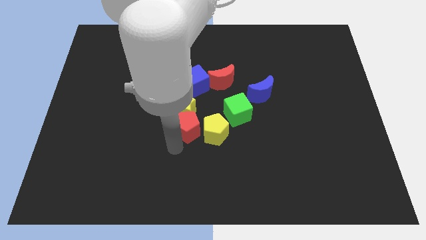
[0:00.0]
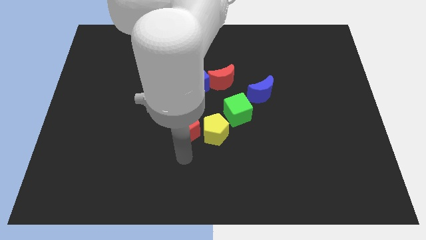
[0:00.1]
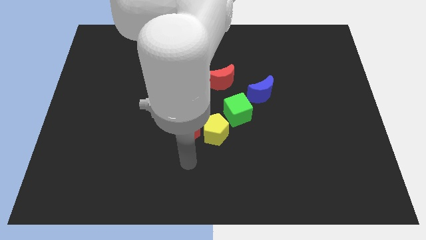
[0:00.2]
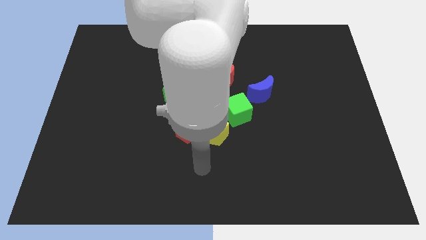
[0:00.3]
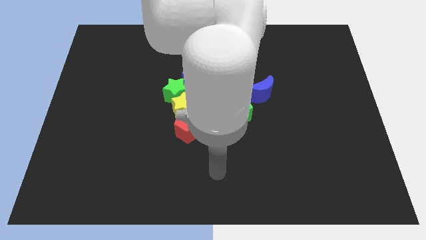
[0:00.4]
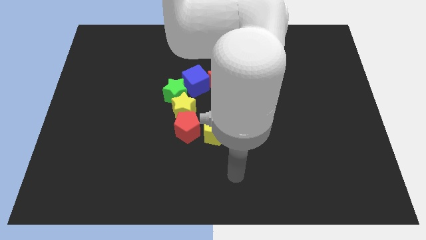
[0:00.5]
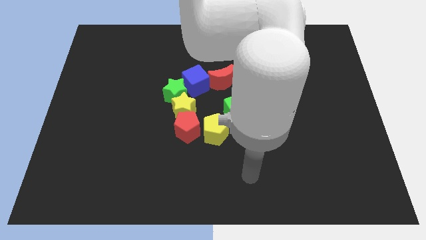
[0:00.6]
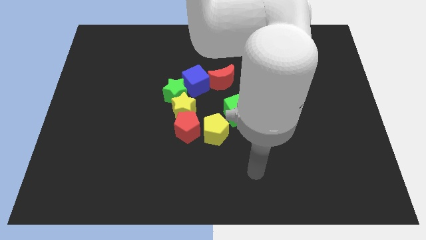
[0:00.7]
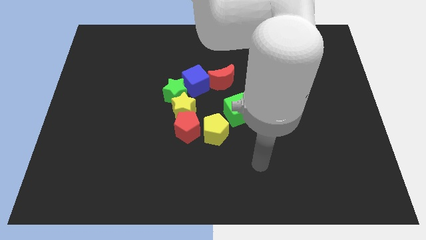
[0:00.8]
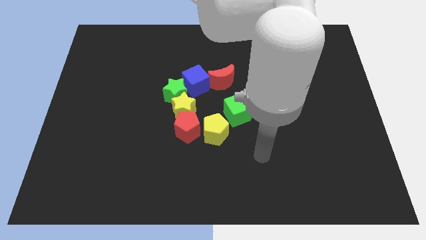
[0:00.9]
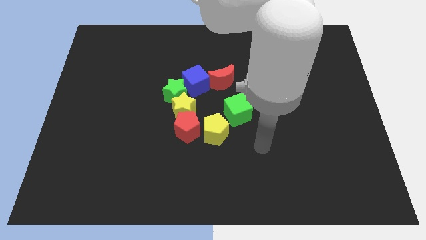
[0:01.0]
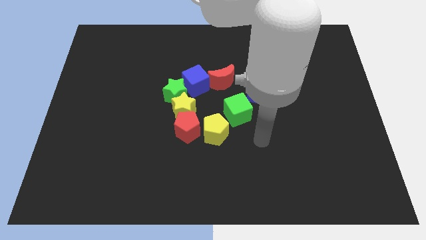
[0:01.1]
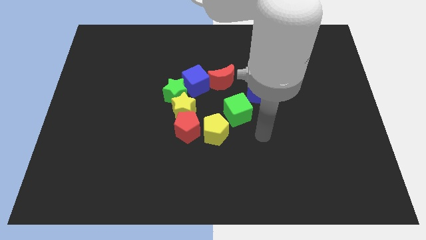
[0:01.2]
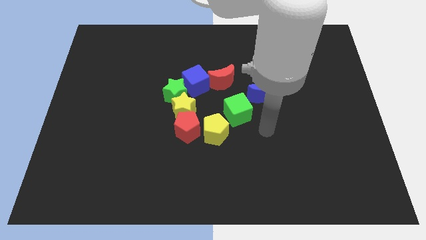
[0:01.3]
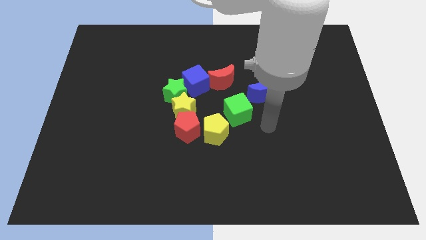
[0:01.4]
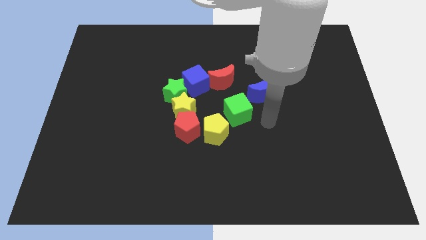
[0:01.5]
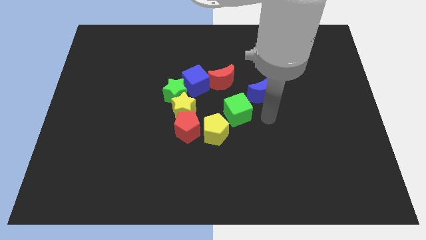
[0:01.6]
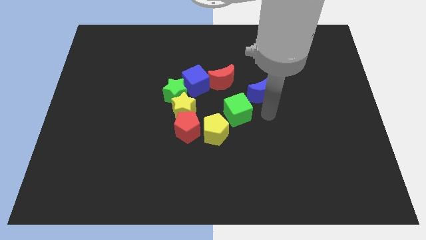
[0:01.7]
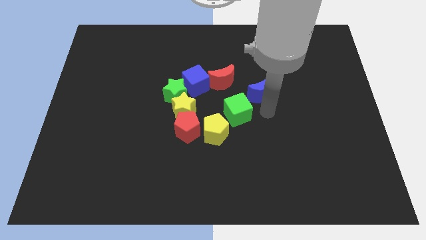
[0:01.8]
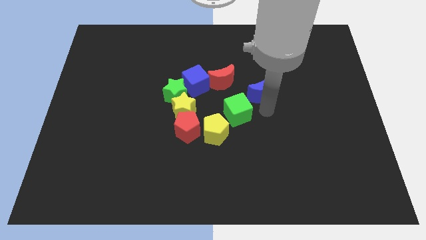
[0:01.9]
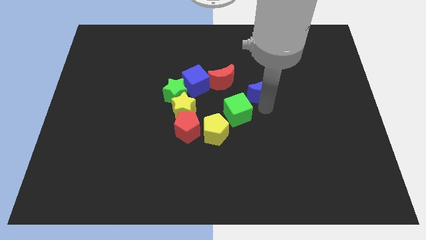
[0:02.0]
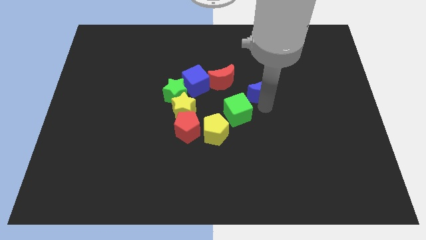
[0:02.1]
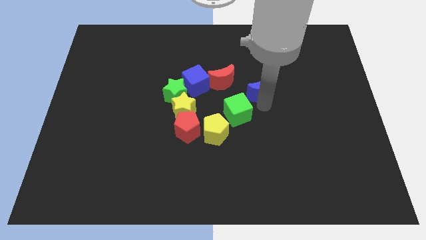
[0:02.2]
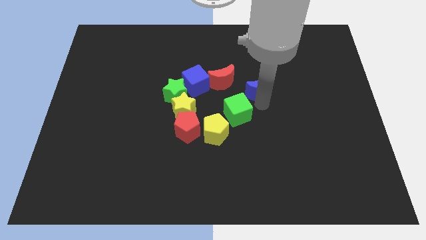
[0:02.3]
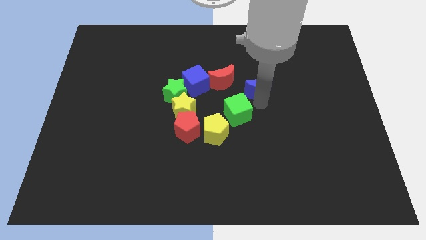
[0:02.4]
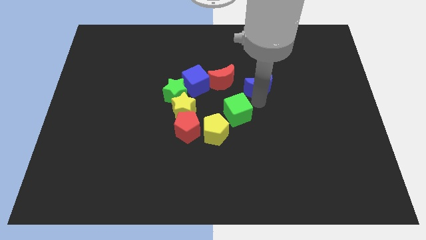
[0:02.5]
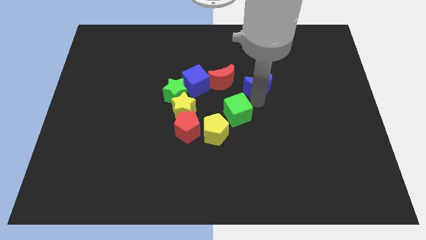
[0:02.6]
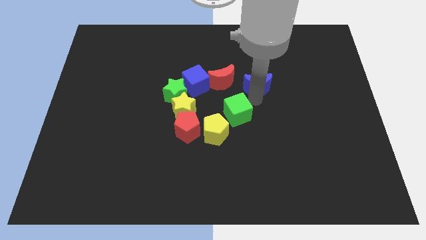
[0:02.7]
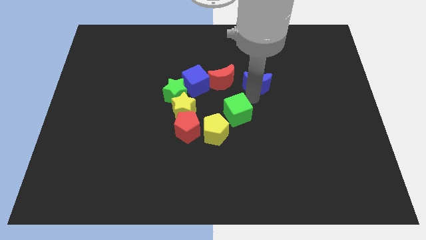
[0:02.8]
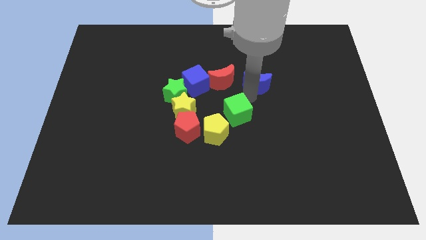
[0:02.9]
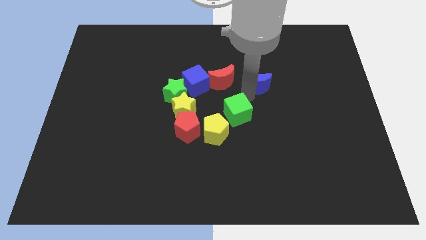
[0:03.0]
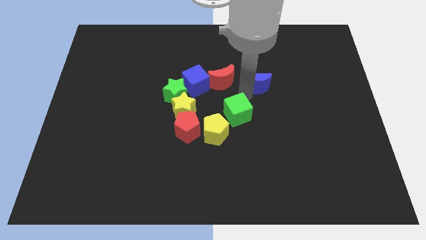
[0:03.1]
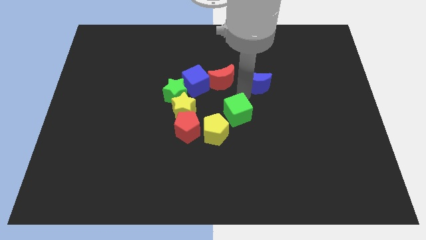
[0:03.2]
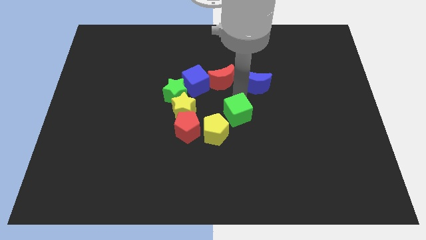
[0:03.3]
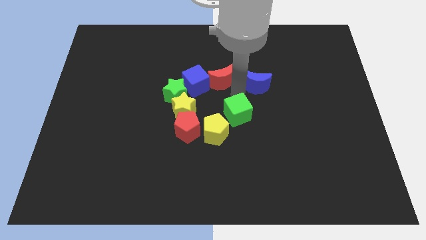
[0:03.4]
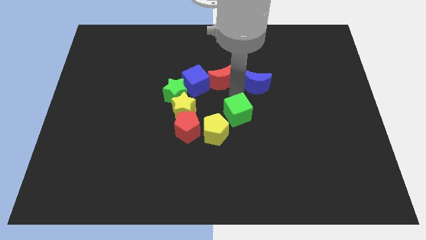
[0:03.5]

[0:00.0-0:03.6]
move blue moon slightly up

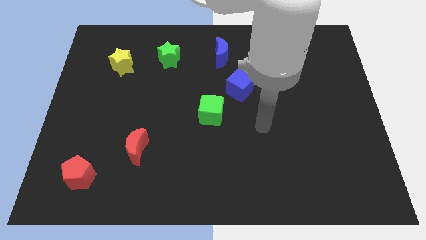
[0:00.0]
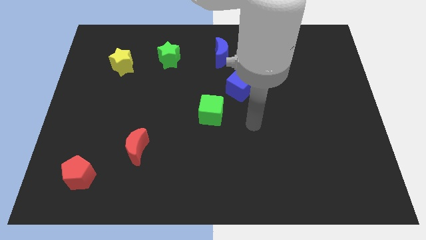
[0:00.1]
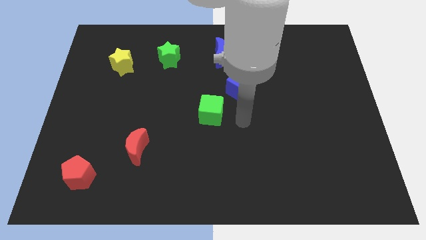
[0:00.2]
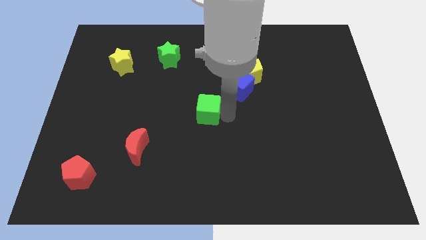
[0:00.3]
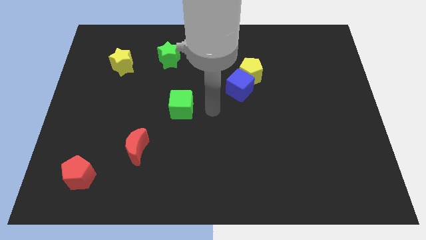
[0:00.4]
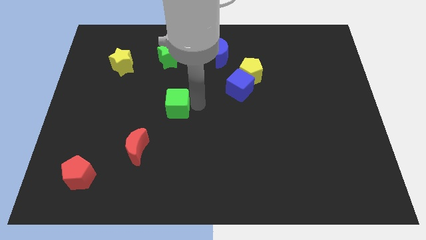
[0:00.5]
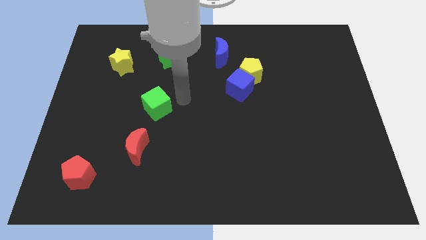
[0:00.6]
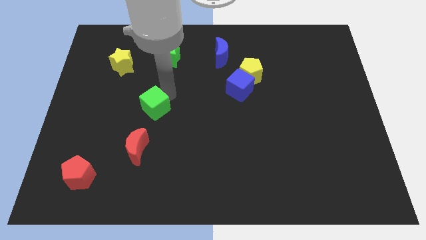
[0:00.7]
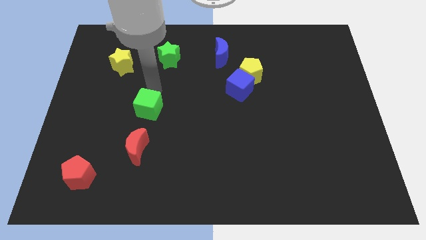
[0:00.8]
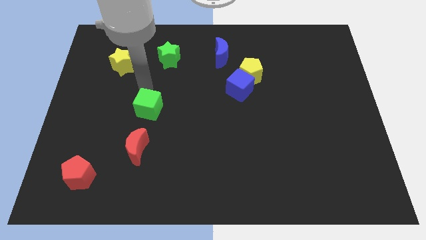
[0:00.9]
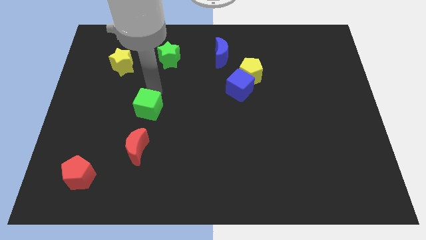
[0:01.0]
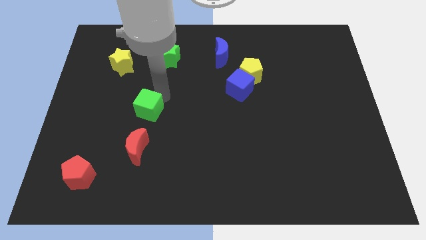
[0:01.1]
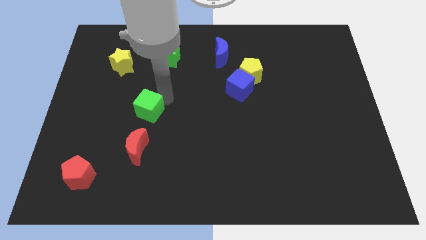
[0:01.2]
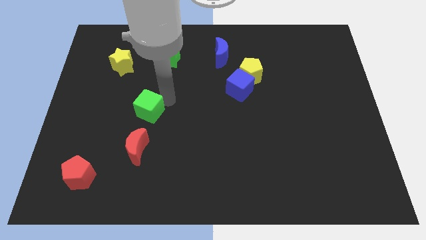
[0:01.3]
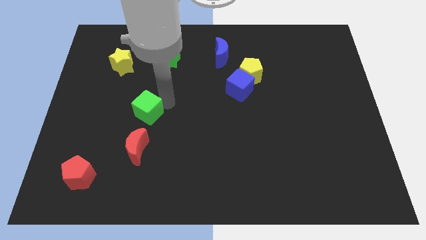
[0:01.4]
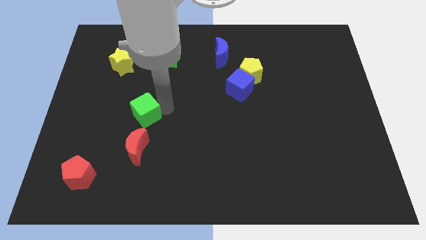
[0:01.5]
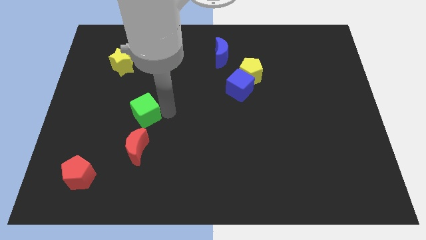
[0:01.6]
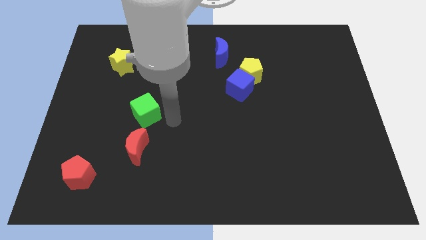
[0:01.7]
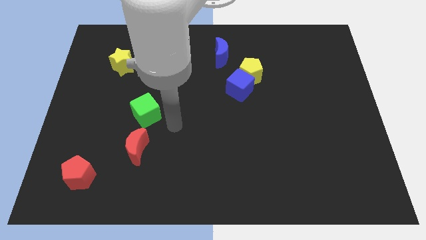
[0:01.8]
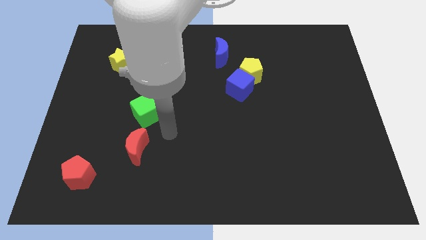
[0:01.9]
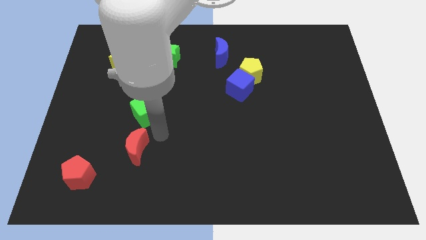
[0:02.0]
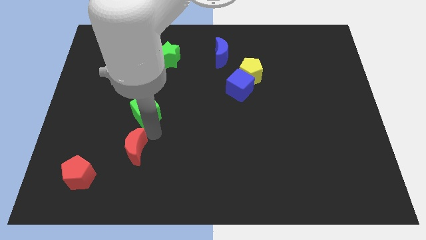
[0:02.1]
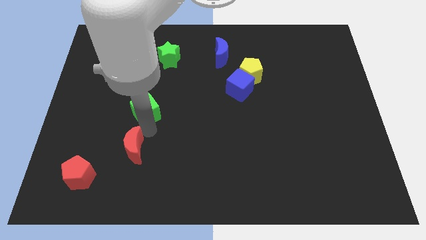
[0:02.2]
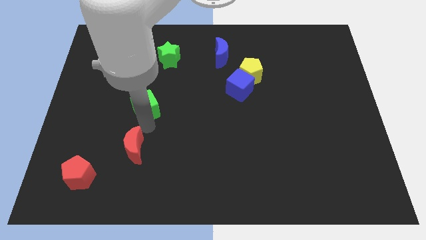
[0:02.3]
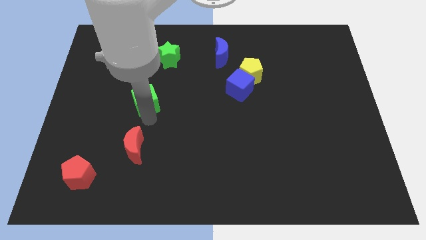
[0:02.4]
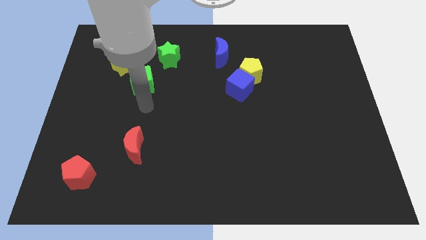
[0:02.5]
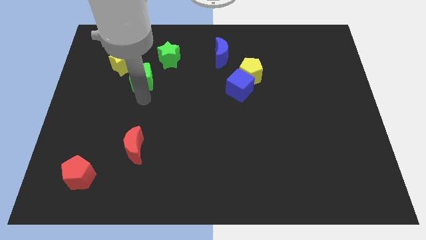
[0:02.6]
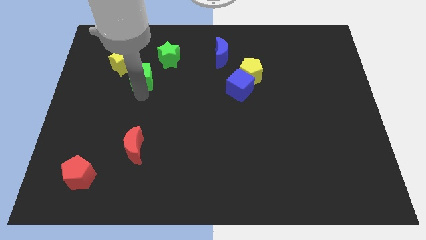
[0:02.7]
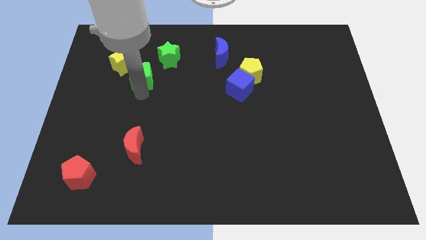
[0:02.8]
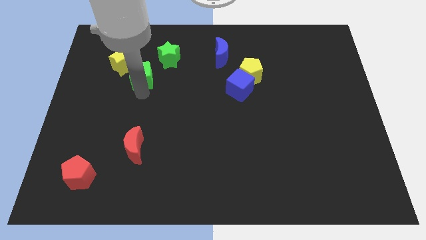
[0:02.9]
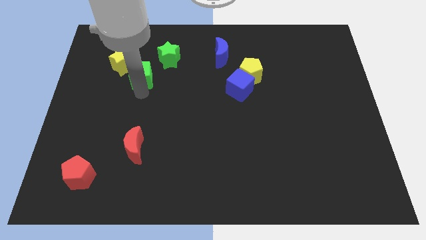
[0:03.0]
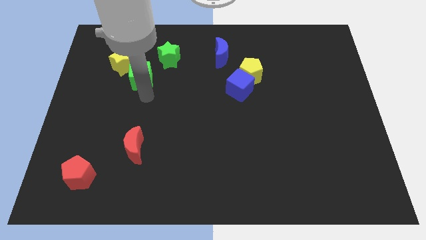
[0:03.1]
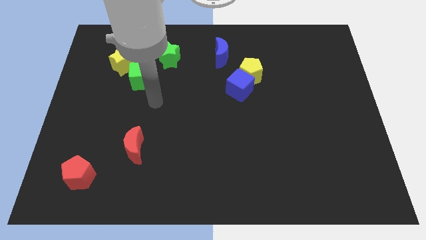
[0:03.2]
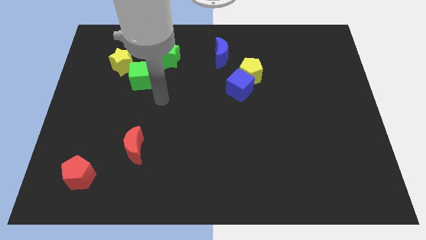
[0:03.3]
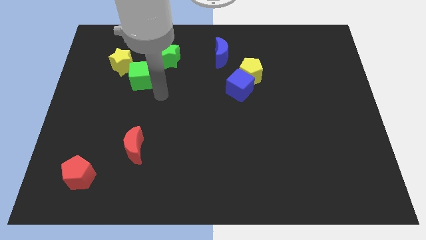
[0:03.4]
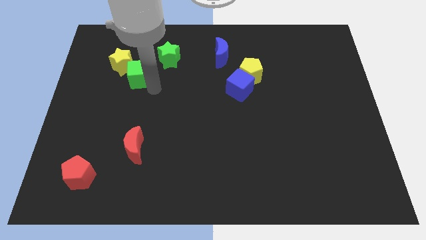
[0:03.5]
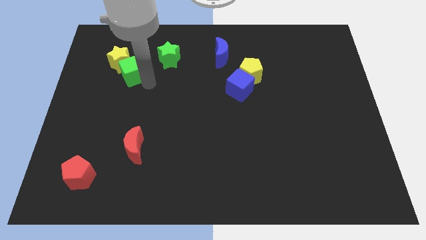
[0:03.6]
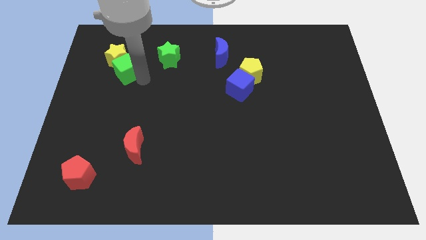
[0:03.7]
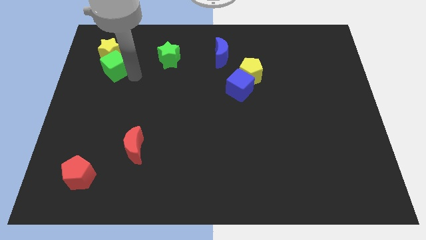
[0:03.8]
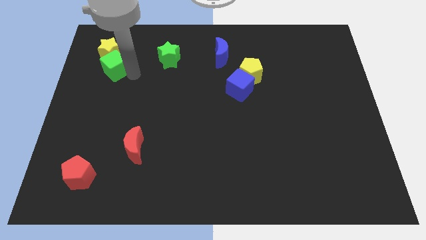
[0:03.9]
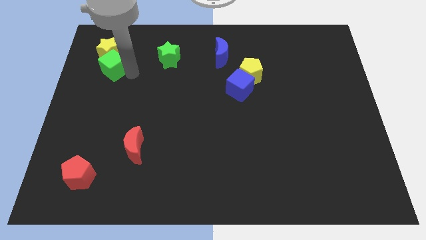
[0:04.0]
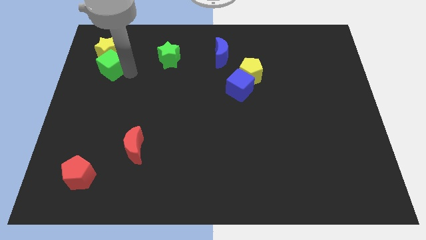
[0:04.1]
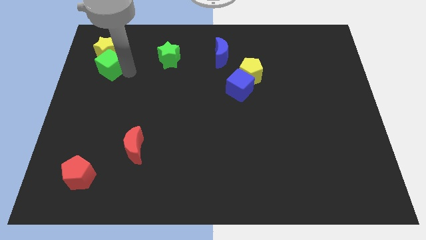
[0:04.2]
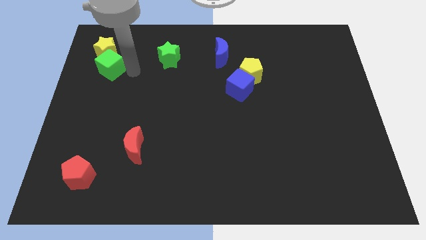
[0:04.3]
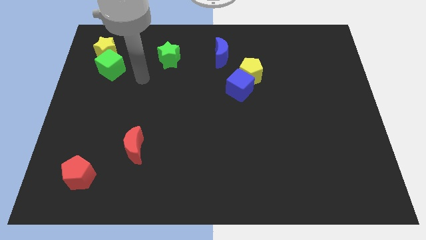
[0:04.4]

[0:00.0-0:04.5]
push green cube into the yellow star

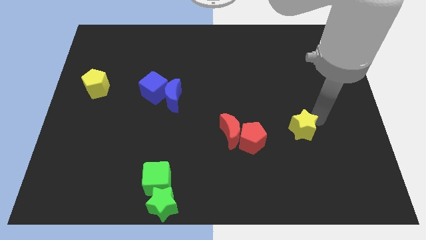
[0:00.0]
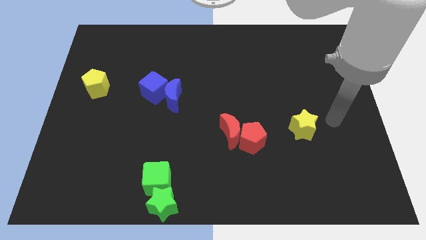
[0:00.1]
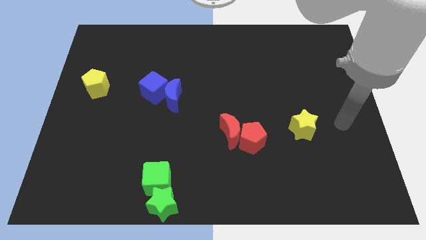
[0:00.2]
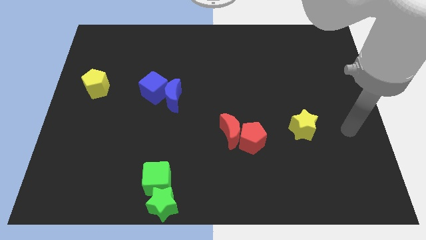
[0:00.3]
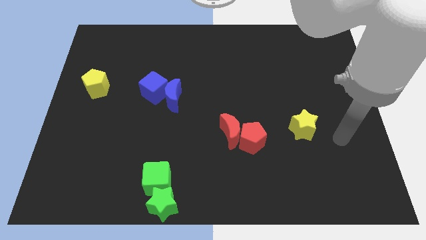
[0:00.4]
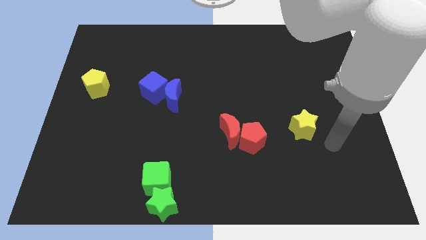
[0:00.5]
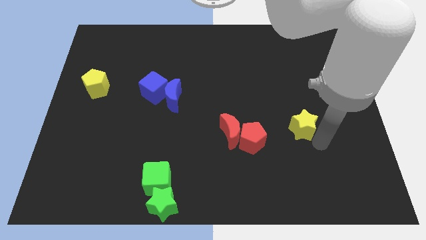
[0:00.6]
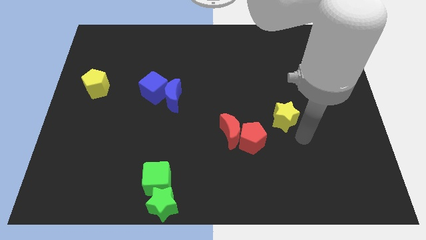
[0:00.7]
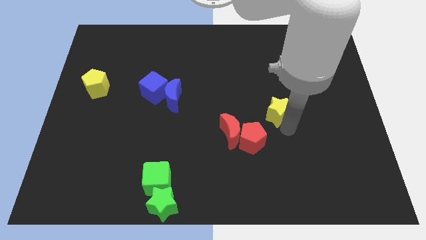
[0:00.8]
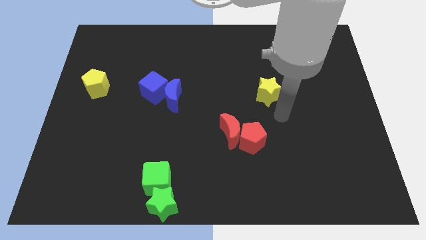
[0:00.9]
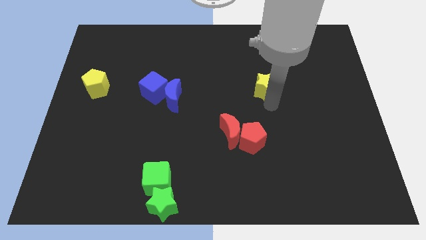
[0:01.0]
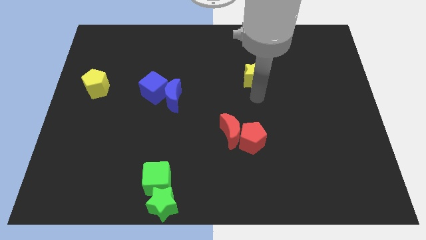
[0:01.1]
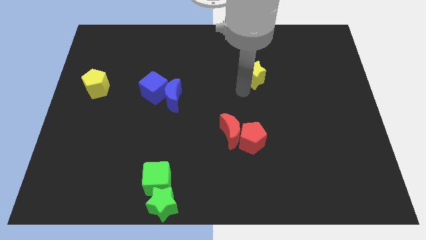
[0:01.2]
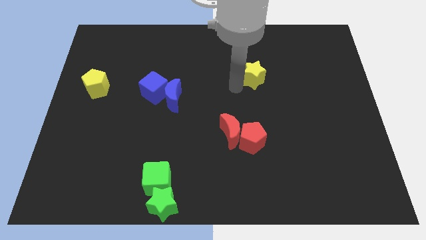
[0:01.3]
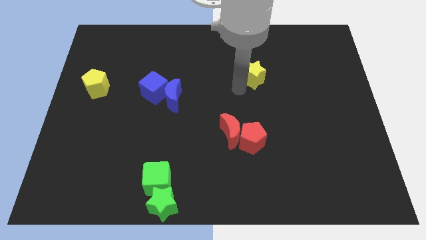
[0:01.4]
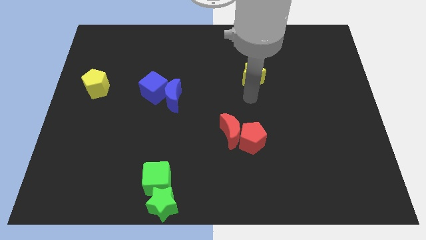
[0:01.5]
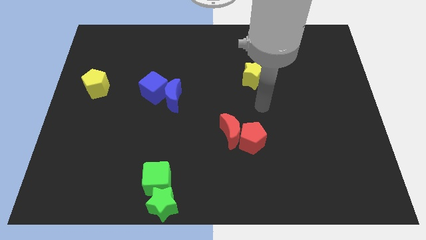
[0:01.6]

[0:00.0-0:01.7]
move the yellow star towards the top side of the board
